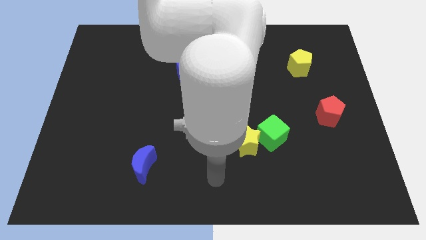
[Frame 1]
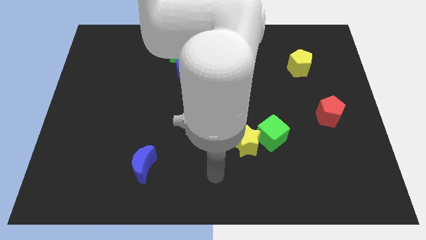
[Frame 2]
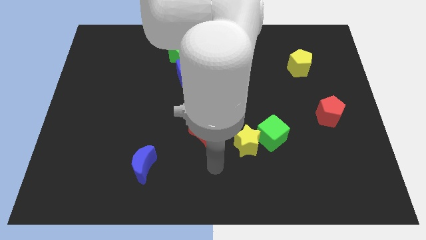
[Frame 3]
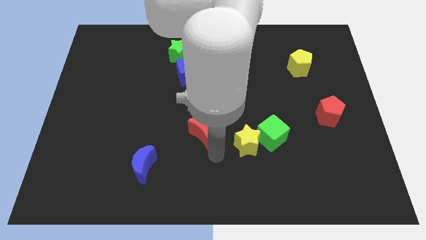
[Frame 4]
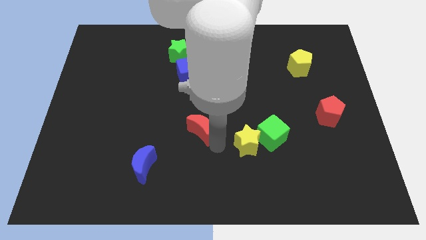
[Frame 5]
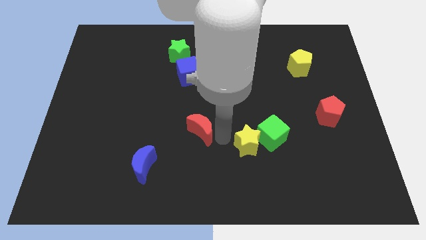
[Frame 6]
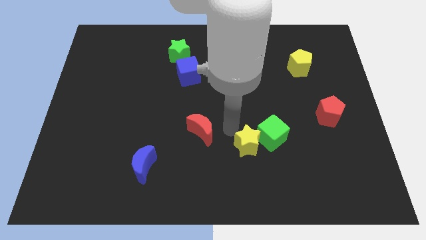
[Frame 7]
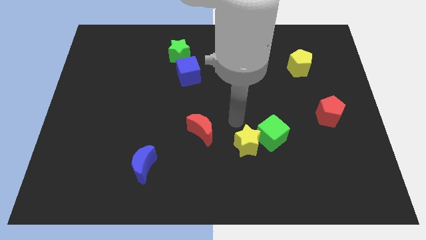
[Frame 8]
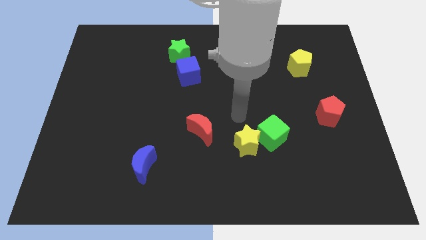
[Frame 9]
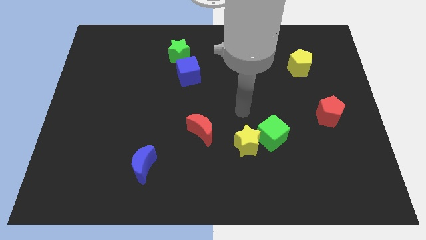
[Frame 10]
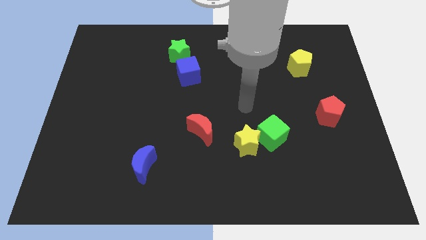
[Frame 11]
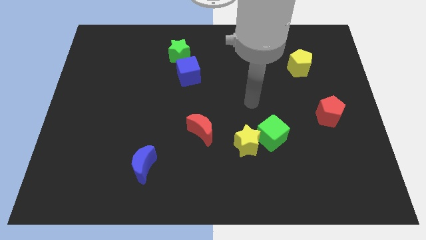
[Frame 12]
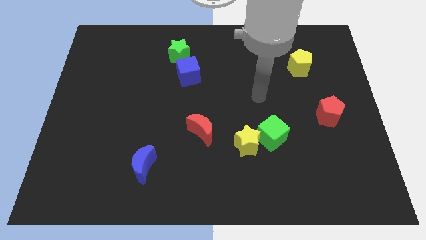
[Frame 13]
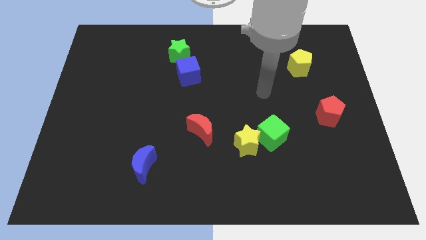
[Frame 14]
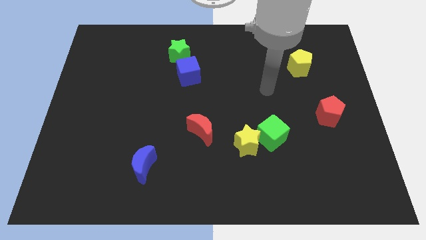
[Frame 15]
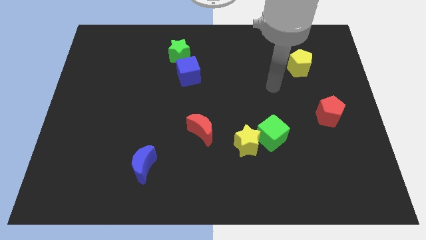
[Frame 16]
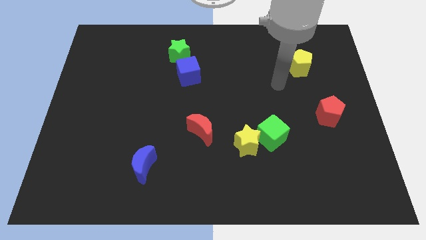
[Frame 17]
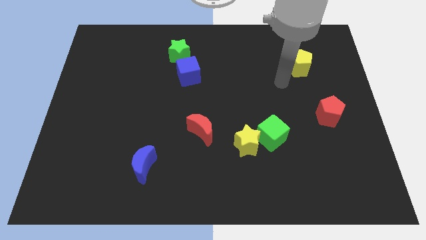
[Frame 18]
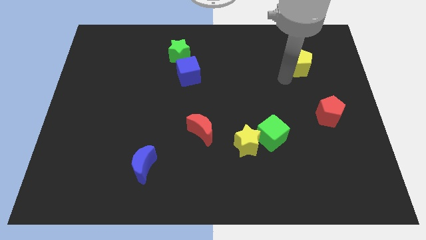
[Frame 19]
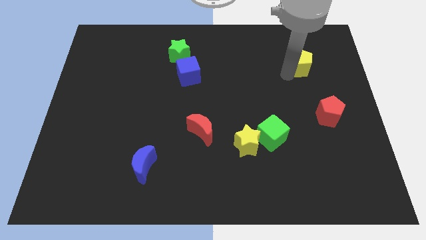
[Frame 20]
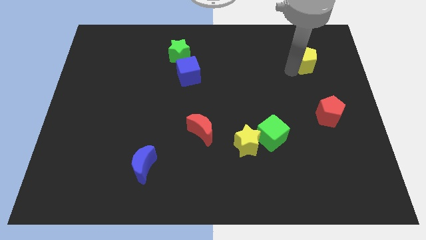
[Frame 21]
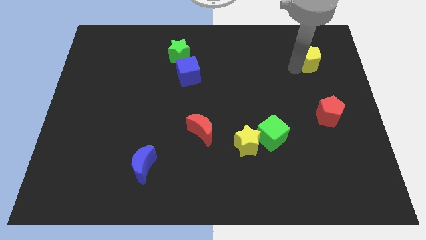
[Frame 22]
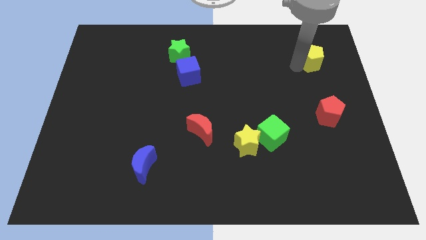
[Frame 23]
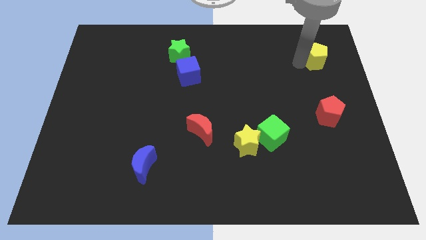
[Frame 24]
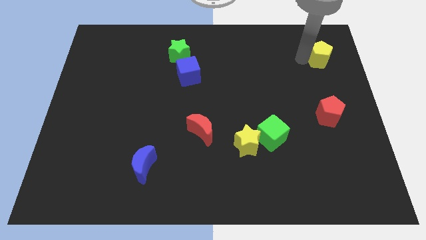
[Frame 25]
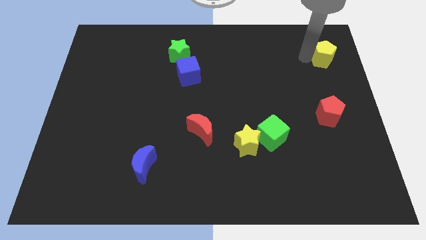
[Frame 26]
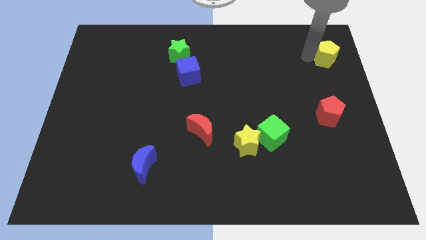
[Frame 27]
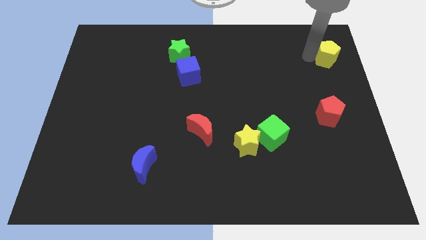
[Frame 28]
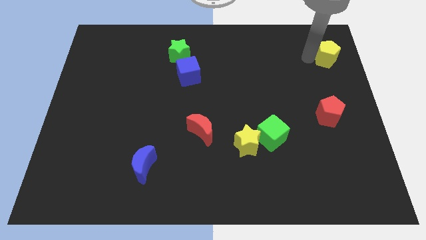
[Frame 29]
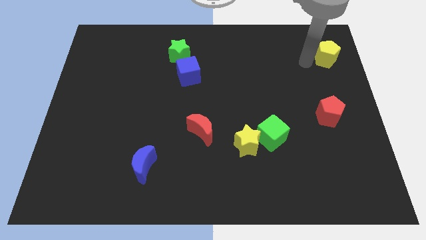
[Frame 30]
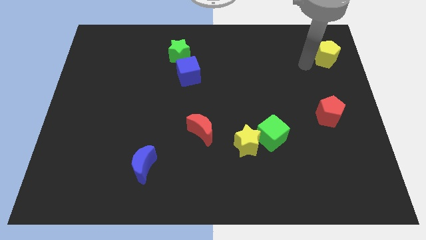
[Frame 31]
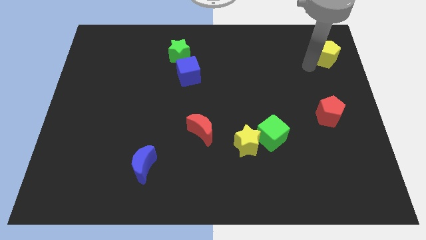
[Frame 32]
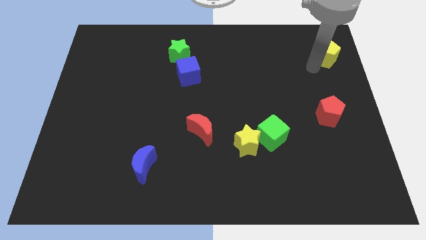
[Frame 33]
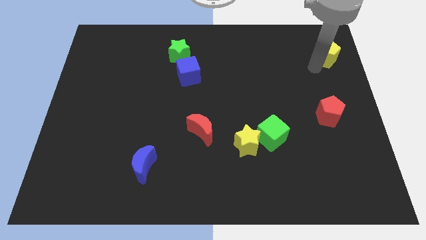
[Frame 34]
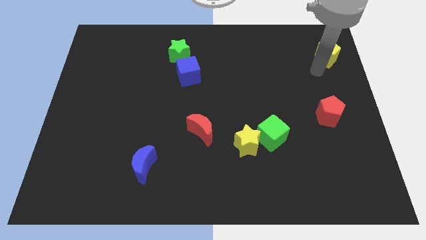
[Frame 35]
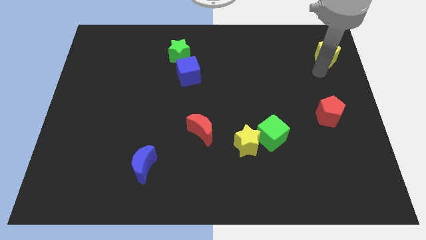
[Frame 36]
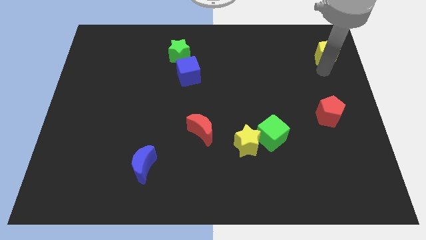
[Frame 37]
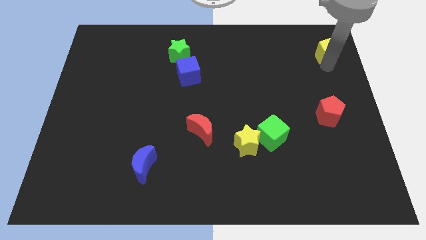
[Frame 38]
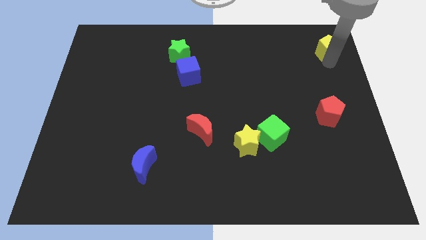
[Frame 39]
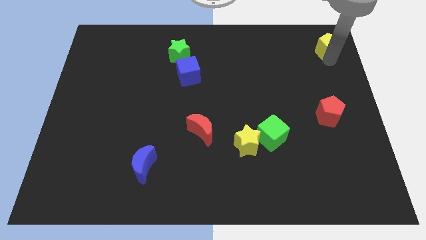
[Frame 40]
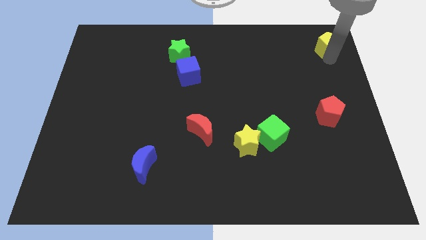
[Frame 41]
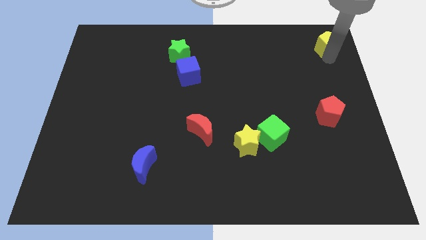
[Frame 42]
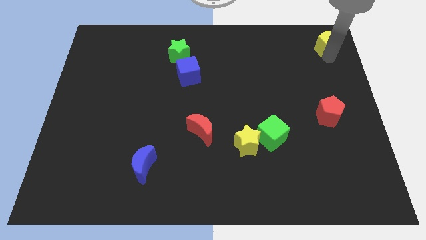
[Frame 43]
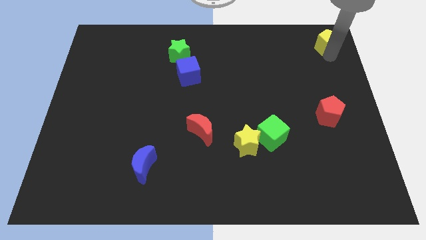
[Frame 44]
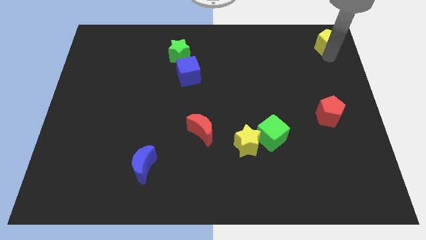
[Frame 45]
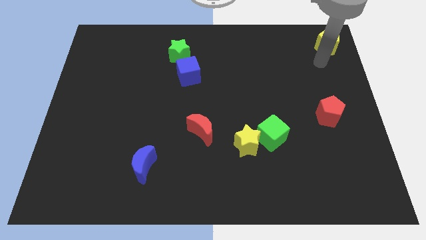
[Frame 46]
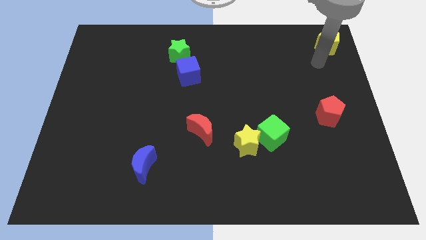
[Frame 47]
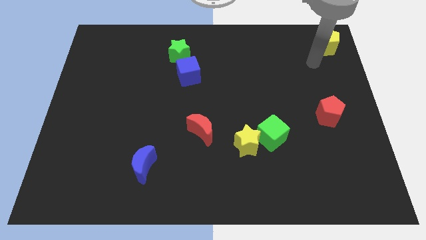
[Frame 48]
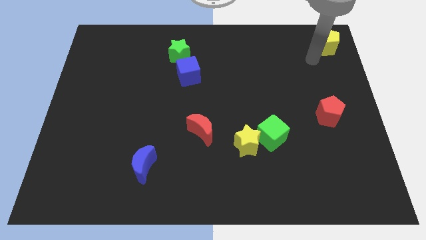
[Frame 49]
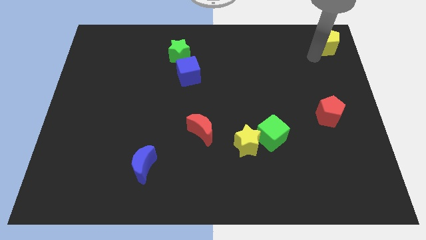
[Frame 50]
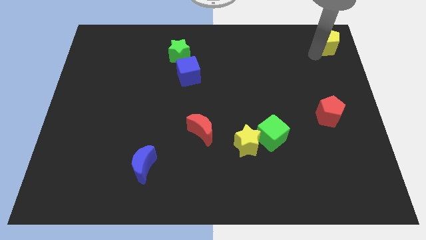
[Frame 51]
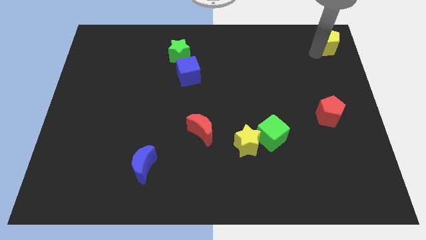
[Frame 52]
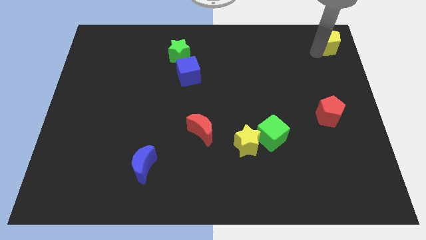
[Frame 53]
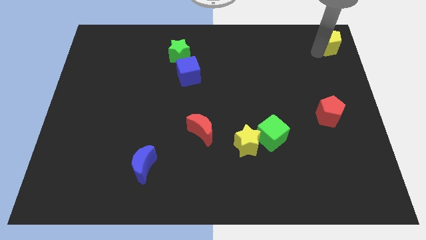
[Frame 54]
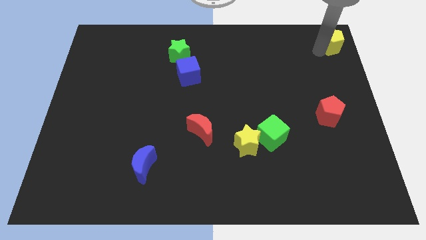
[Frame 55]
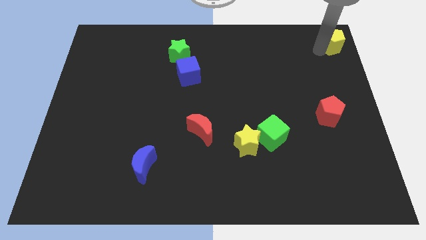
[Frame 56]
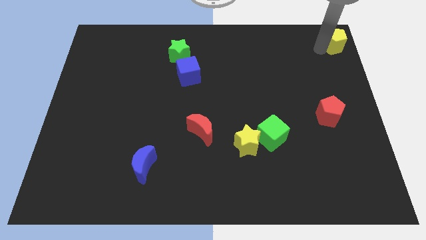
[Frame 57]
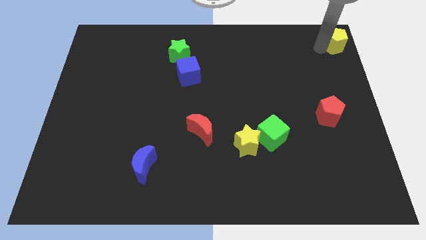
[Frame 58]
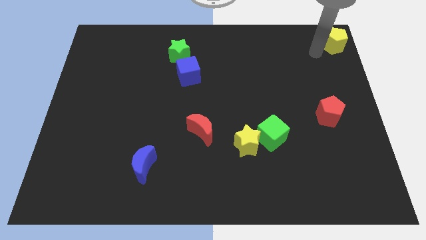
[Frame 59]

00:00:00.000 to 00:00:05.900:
move the yellow pentagon to the top right corner of the board

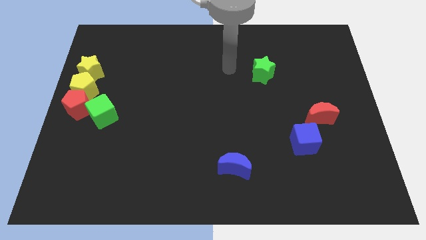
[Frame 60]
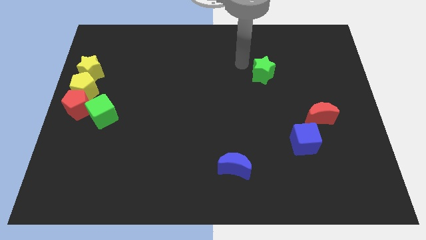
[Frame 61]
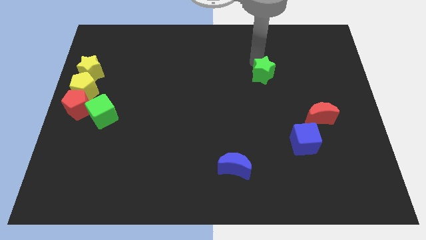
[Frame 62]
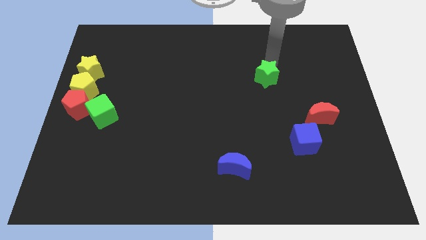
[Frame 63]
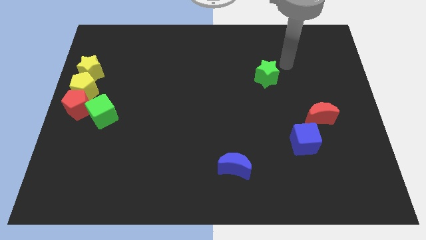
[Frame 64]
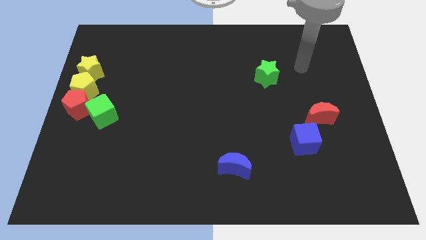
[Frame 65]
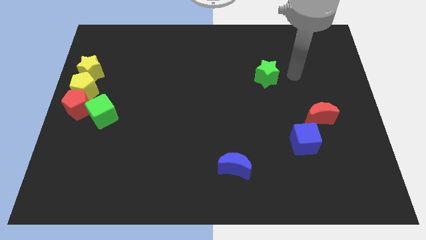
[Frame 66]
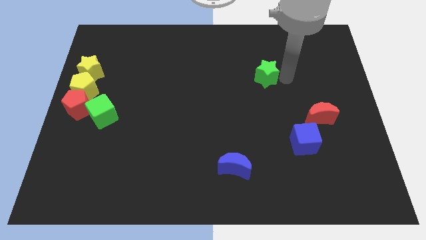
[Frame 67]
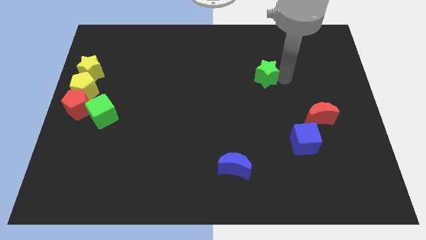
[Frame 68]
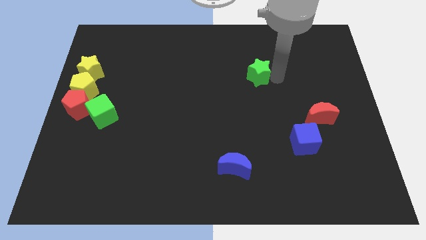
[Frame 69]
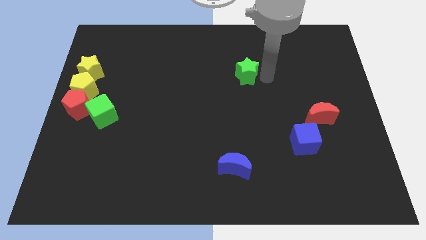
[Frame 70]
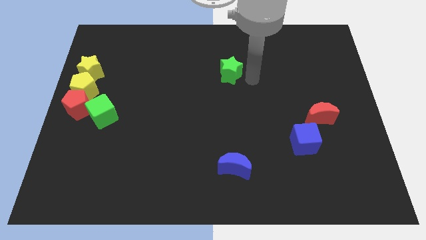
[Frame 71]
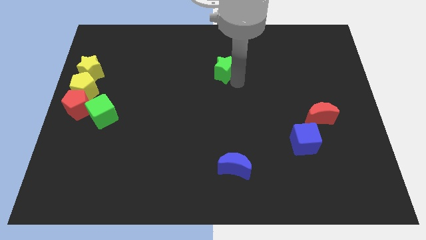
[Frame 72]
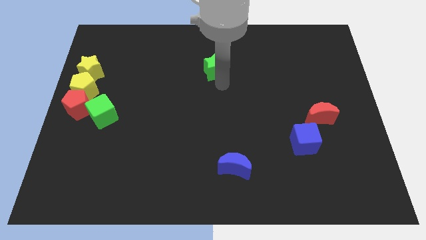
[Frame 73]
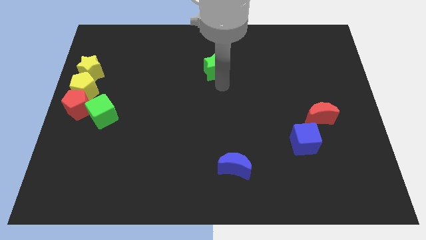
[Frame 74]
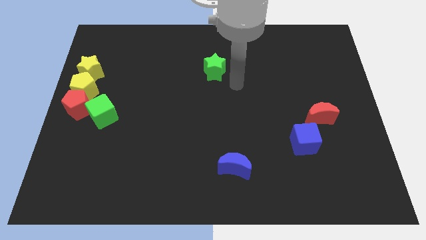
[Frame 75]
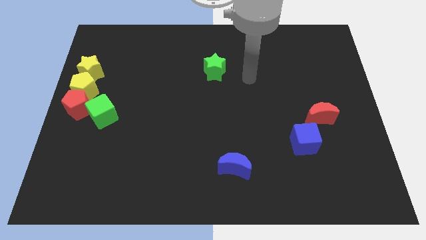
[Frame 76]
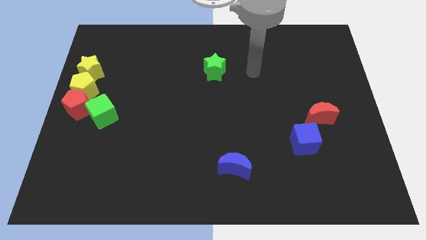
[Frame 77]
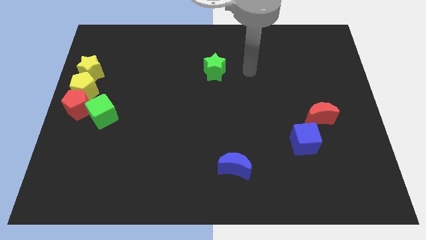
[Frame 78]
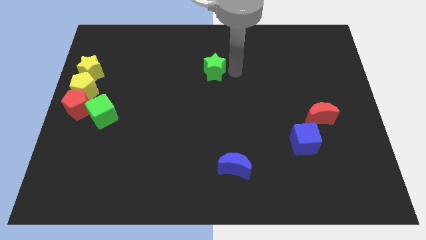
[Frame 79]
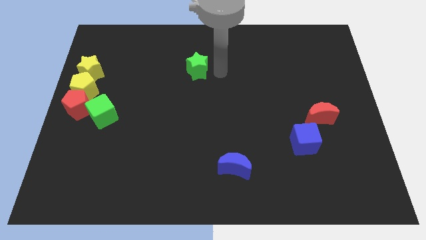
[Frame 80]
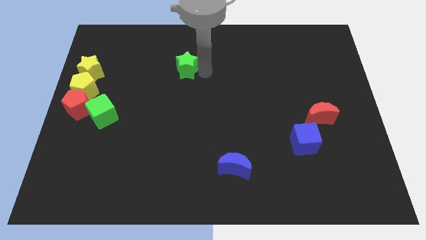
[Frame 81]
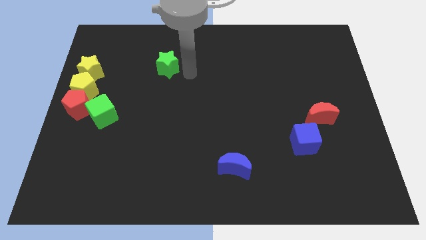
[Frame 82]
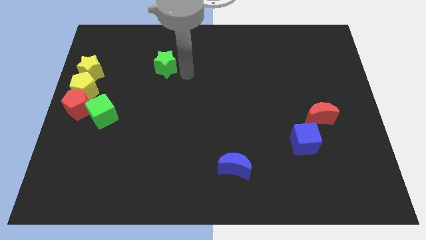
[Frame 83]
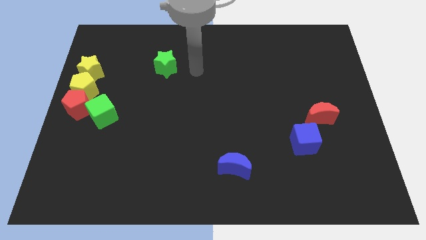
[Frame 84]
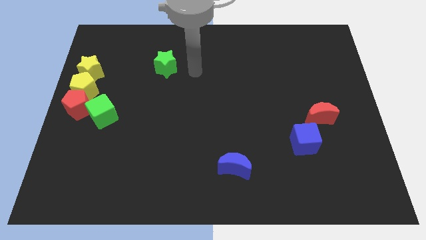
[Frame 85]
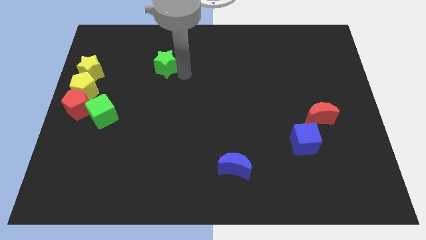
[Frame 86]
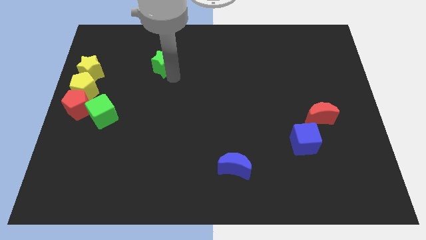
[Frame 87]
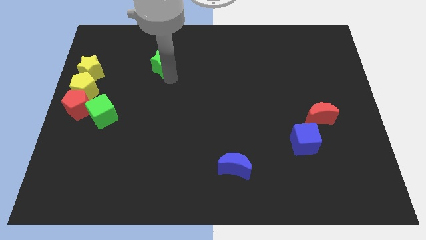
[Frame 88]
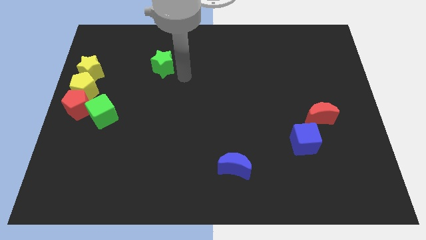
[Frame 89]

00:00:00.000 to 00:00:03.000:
move green star towards yellow star
